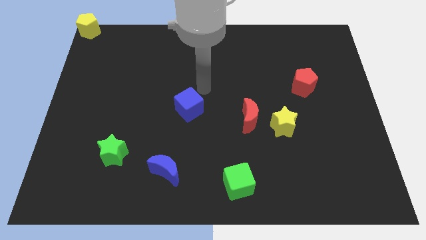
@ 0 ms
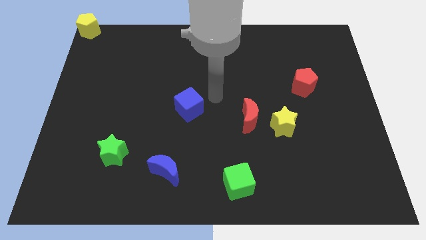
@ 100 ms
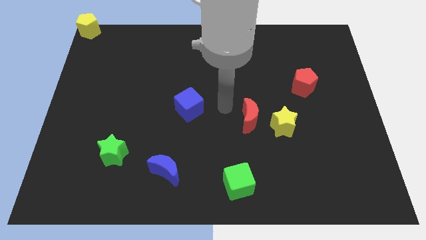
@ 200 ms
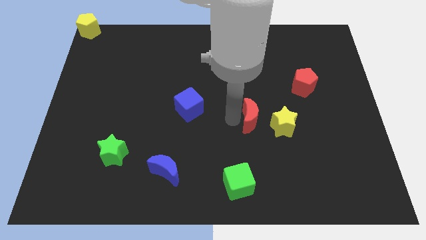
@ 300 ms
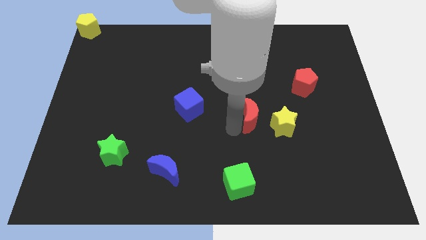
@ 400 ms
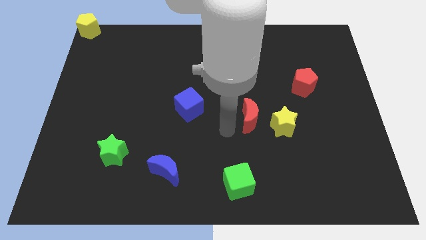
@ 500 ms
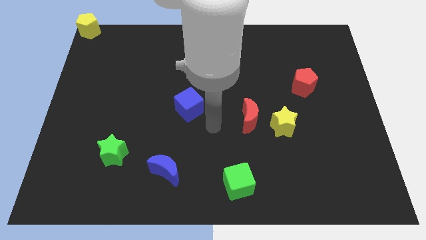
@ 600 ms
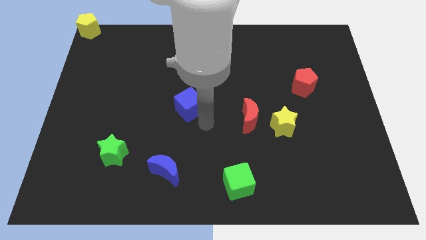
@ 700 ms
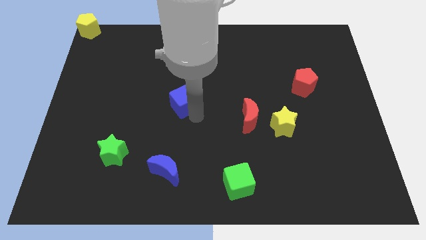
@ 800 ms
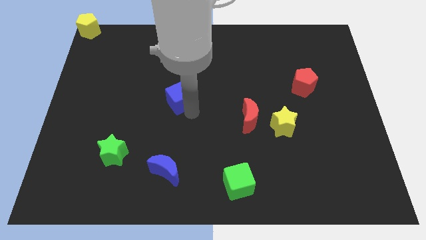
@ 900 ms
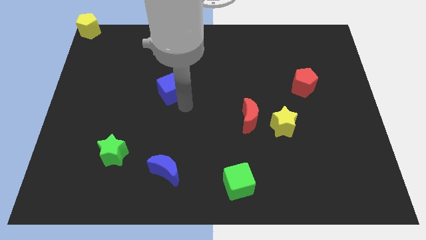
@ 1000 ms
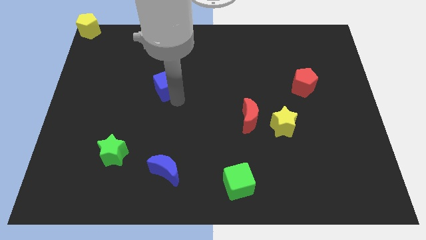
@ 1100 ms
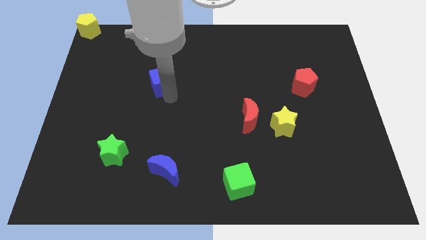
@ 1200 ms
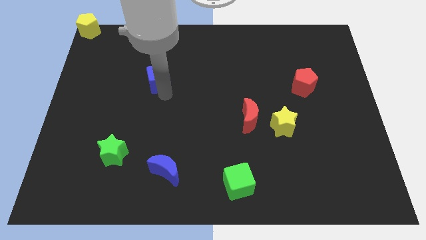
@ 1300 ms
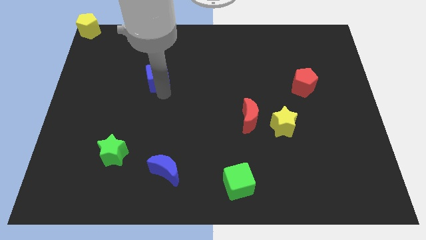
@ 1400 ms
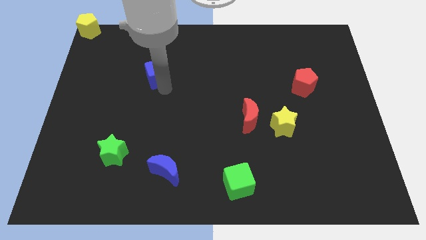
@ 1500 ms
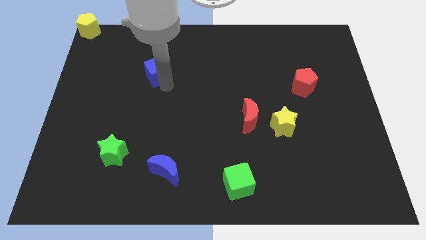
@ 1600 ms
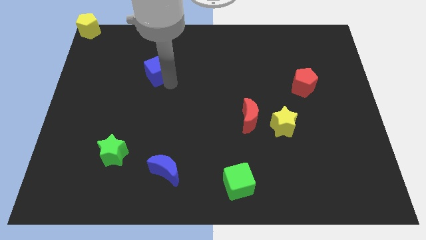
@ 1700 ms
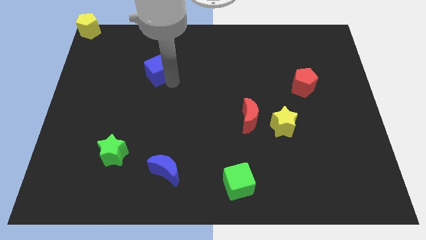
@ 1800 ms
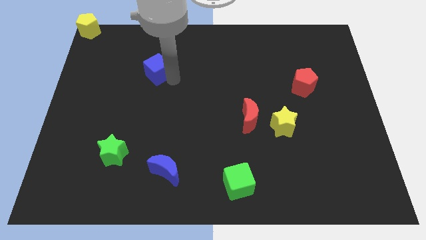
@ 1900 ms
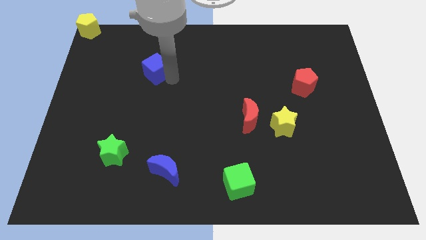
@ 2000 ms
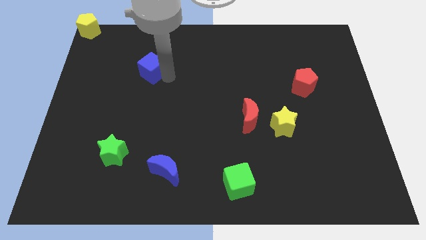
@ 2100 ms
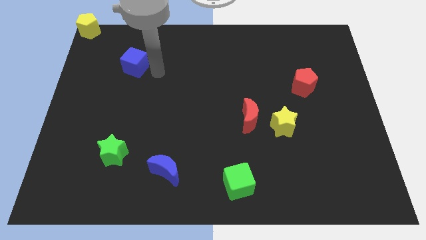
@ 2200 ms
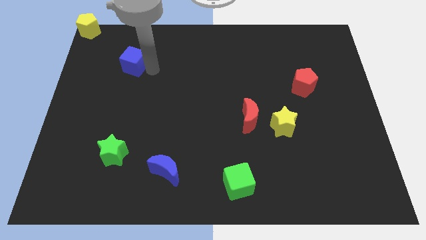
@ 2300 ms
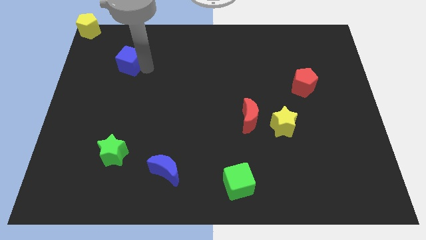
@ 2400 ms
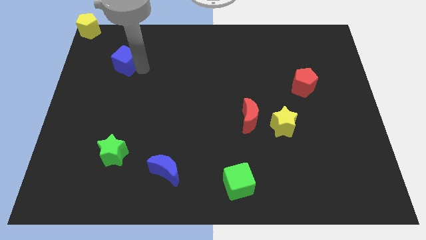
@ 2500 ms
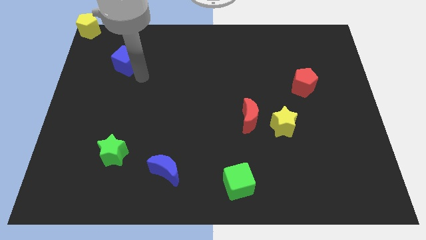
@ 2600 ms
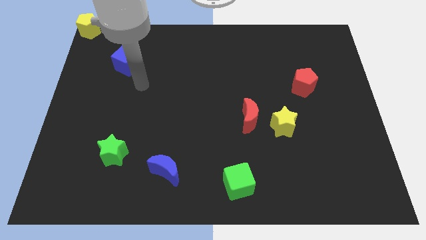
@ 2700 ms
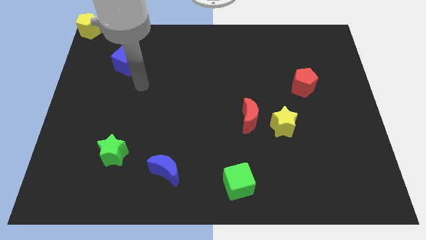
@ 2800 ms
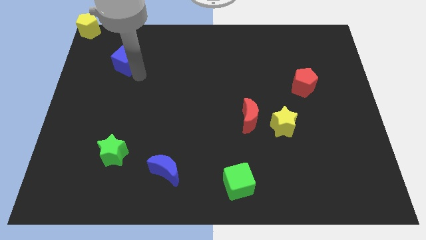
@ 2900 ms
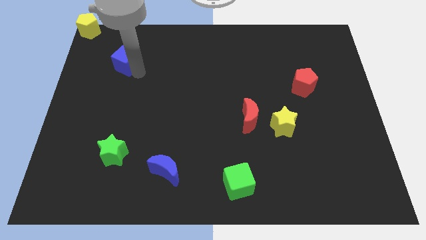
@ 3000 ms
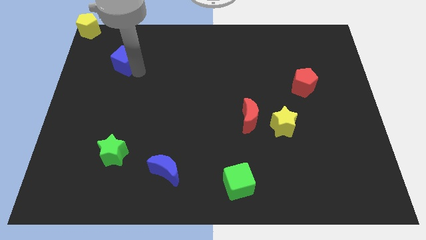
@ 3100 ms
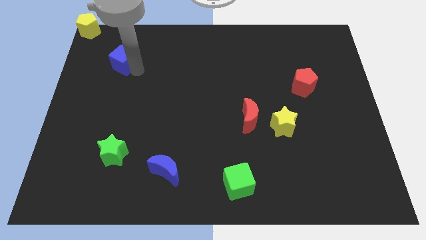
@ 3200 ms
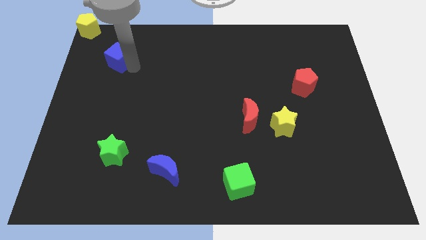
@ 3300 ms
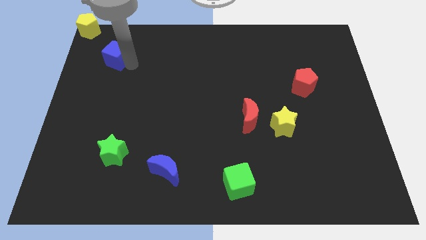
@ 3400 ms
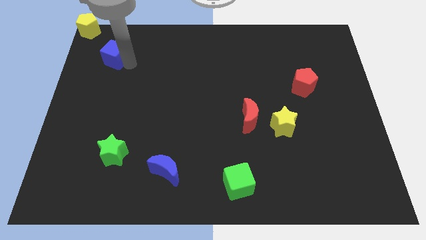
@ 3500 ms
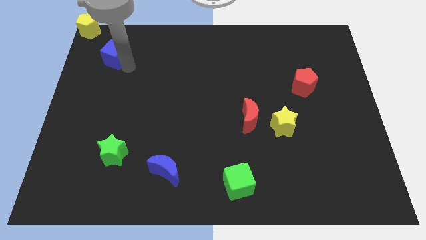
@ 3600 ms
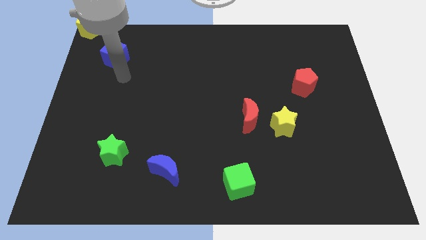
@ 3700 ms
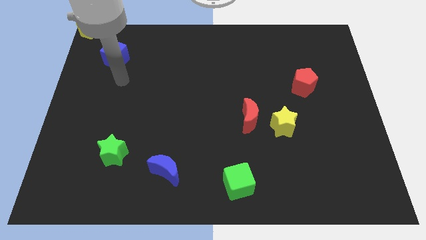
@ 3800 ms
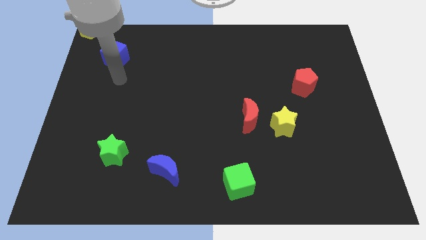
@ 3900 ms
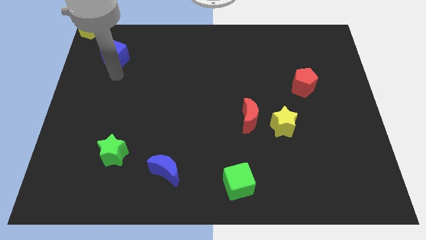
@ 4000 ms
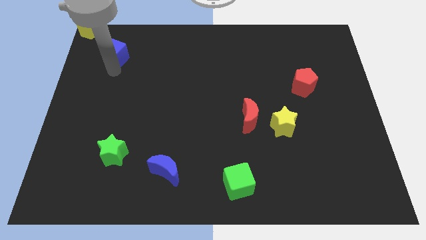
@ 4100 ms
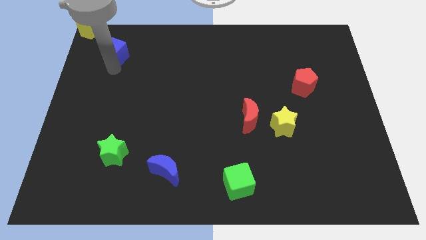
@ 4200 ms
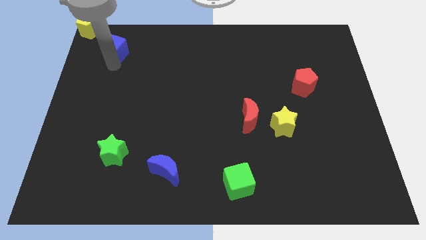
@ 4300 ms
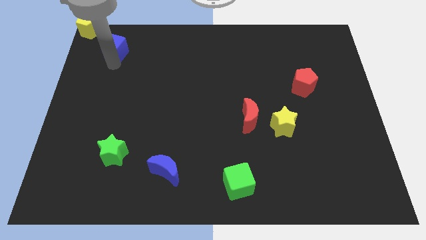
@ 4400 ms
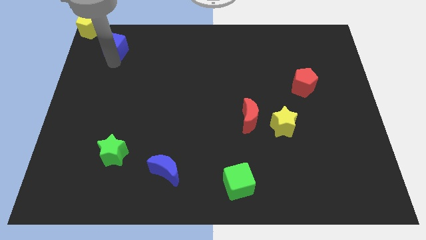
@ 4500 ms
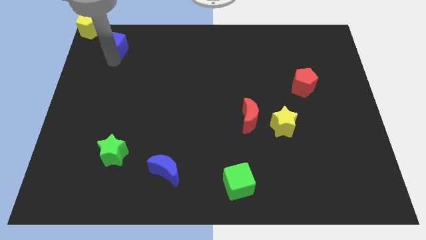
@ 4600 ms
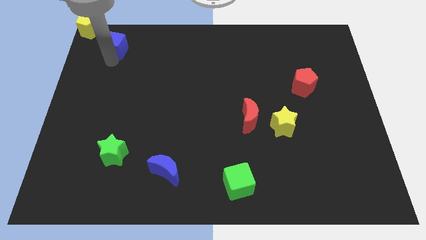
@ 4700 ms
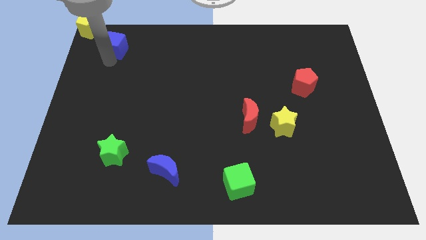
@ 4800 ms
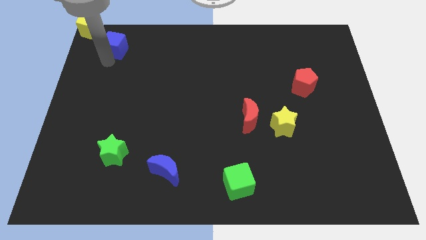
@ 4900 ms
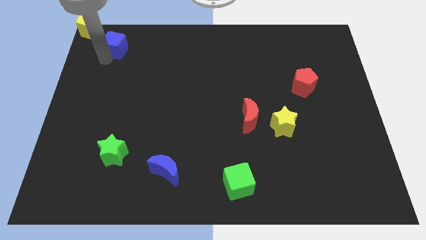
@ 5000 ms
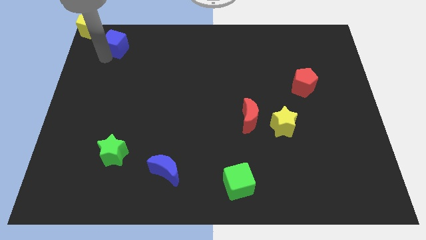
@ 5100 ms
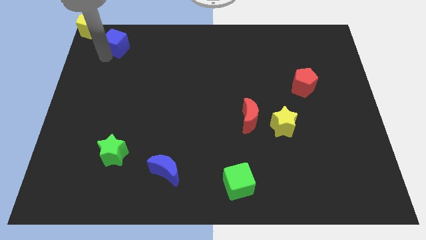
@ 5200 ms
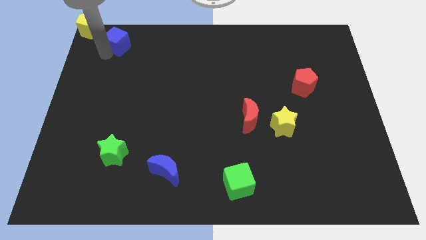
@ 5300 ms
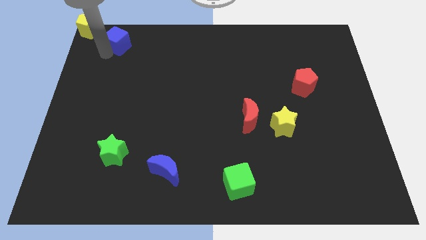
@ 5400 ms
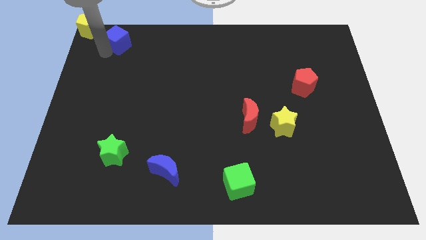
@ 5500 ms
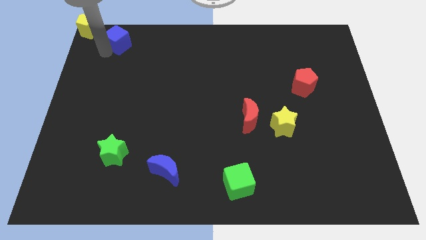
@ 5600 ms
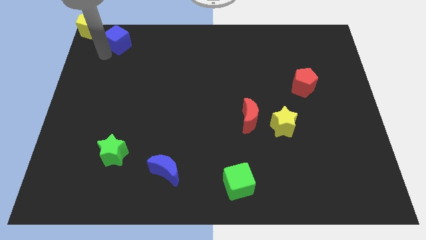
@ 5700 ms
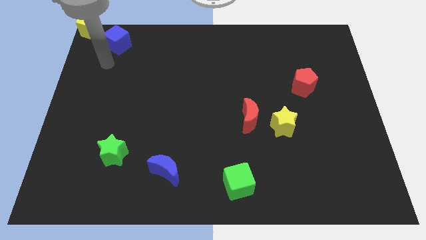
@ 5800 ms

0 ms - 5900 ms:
move the blue cube towards the top left of the board

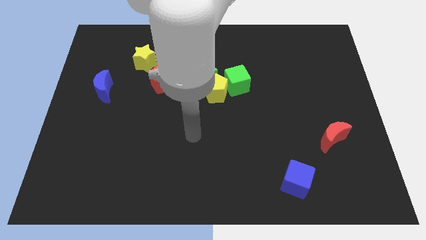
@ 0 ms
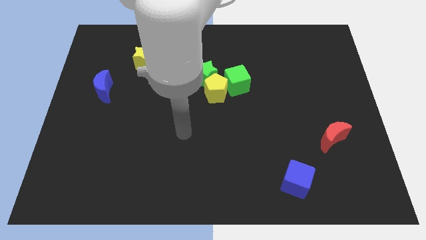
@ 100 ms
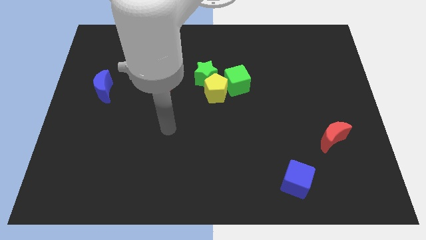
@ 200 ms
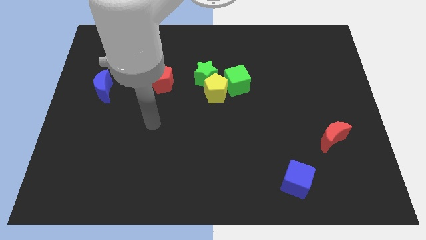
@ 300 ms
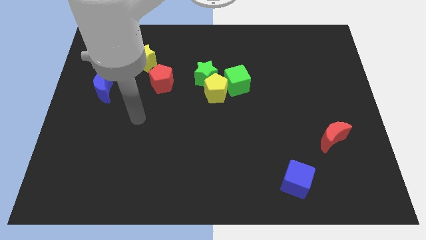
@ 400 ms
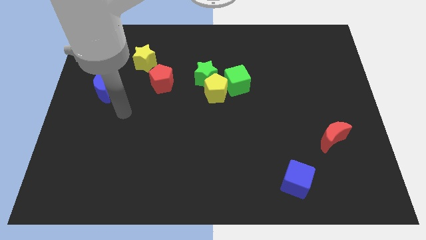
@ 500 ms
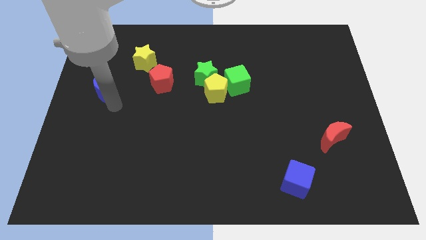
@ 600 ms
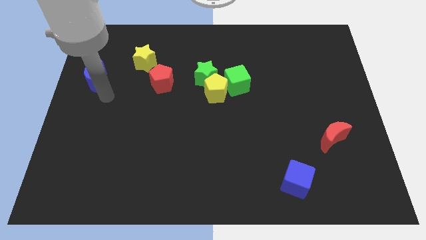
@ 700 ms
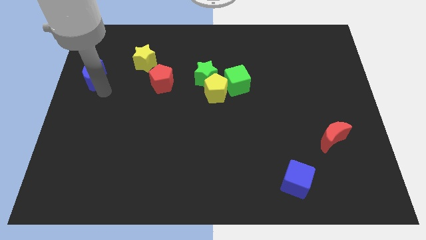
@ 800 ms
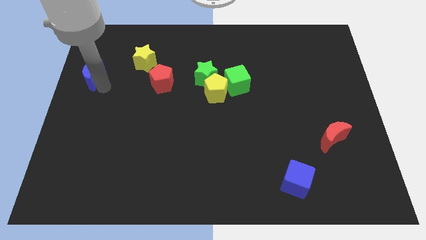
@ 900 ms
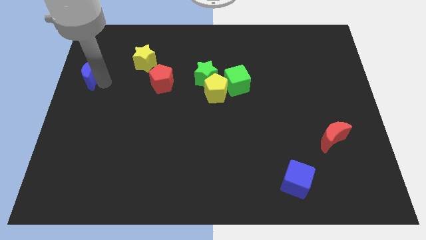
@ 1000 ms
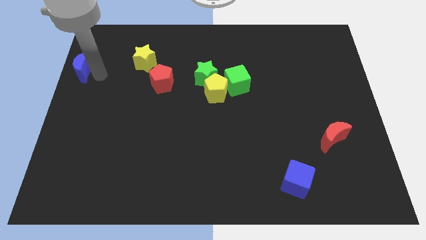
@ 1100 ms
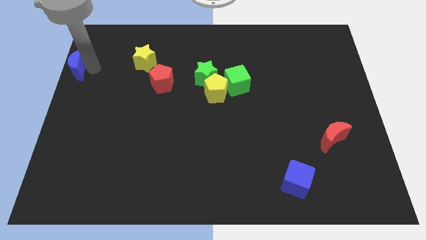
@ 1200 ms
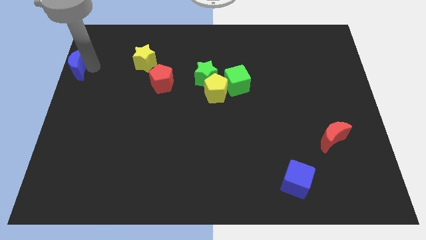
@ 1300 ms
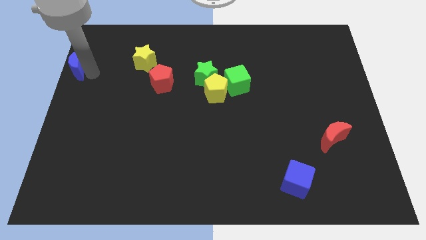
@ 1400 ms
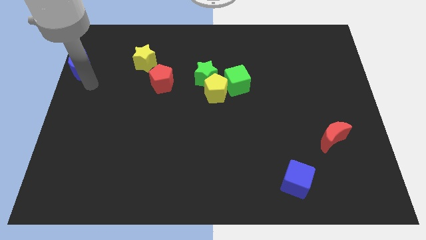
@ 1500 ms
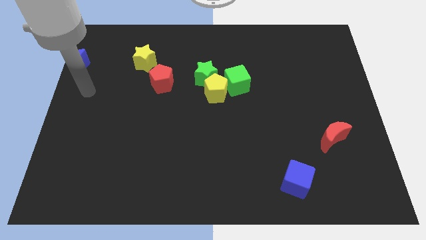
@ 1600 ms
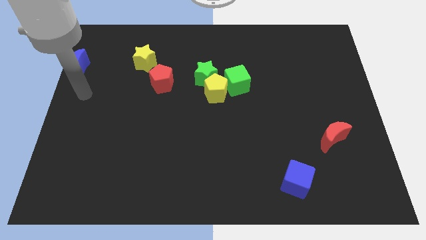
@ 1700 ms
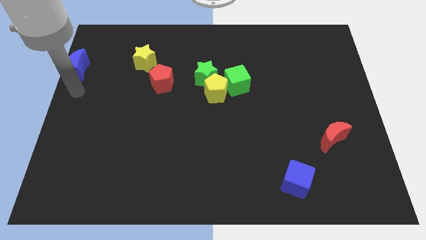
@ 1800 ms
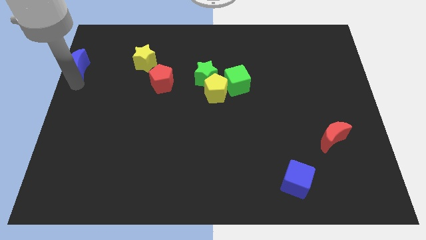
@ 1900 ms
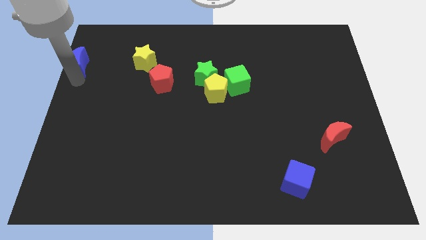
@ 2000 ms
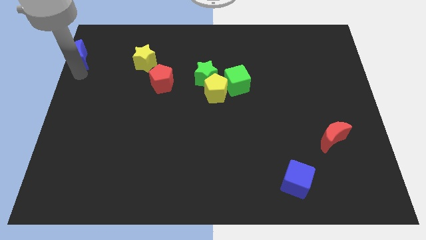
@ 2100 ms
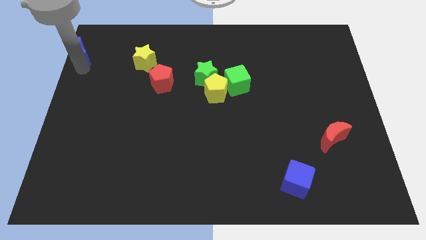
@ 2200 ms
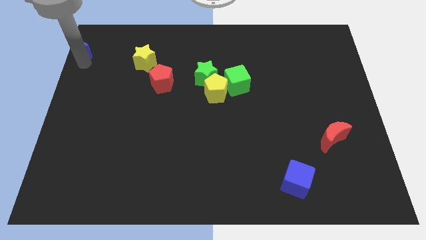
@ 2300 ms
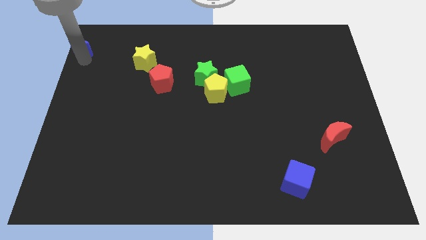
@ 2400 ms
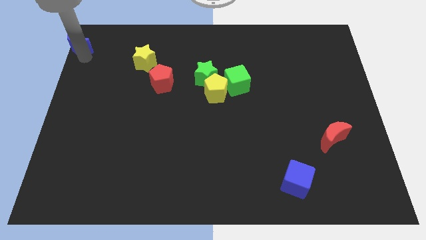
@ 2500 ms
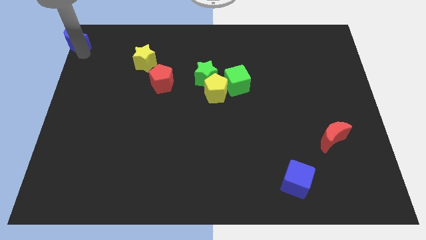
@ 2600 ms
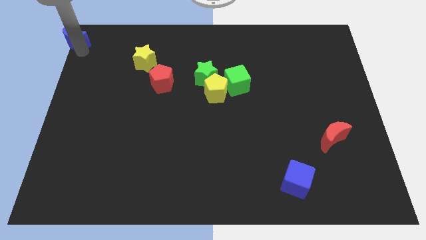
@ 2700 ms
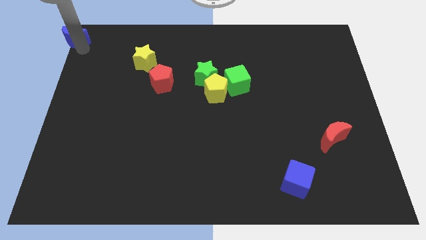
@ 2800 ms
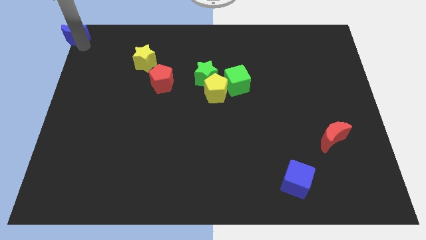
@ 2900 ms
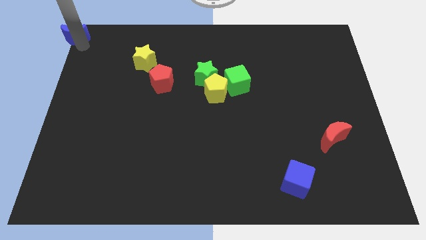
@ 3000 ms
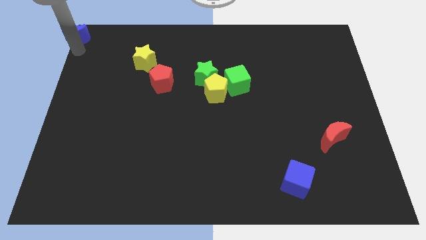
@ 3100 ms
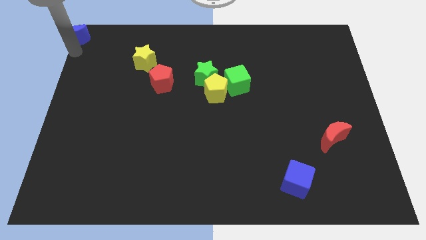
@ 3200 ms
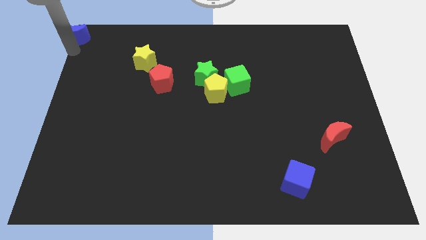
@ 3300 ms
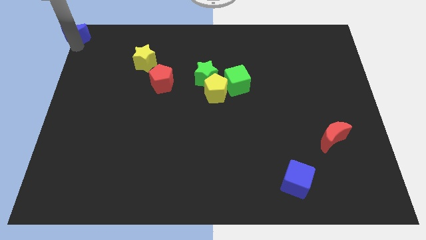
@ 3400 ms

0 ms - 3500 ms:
place the blue moon diagonally to yellow star
